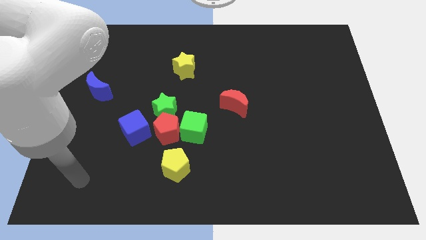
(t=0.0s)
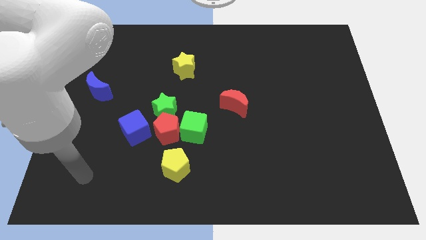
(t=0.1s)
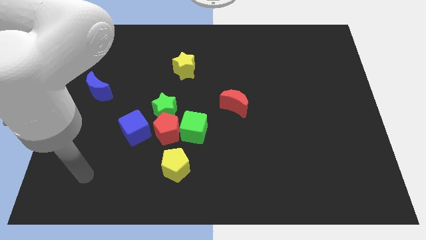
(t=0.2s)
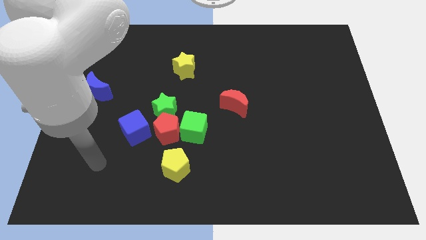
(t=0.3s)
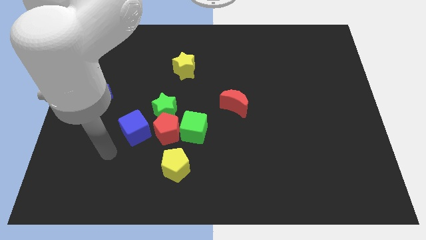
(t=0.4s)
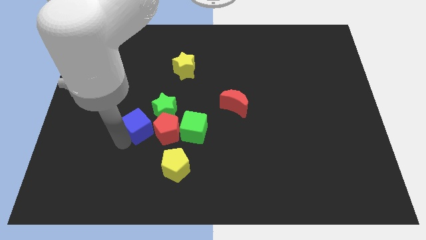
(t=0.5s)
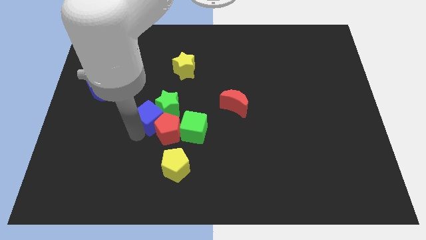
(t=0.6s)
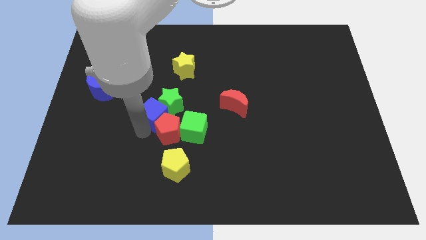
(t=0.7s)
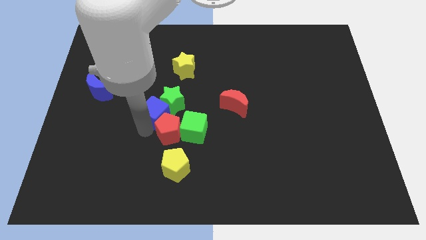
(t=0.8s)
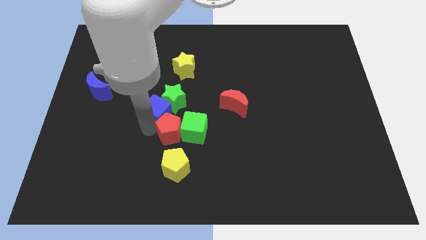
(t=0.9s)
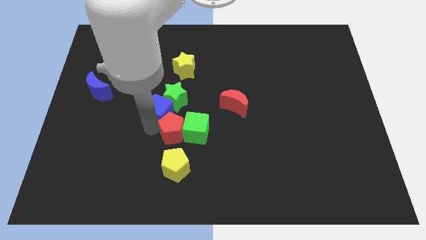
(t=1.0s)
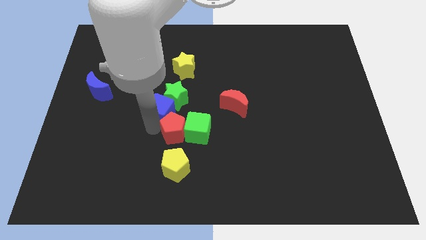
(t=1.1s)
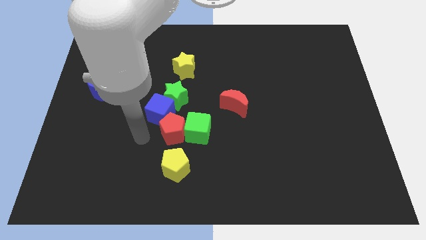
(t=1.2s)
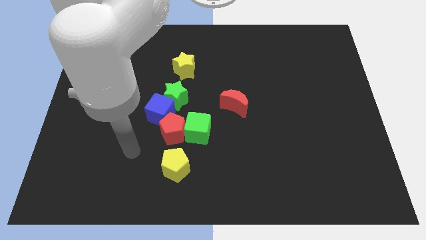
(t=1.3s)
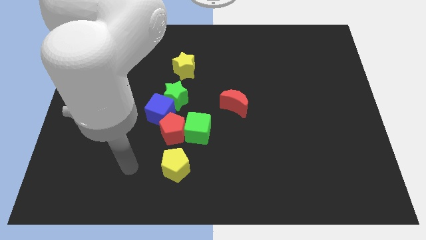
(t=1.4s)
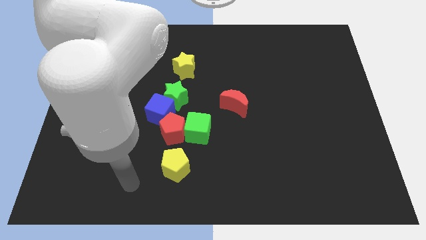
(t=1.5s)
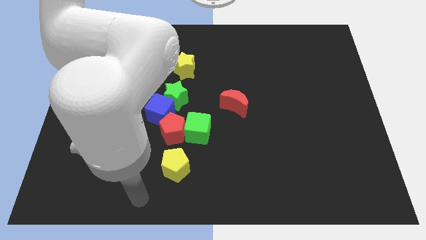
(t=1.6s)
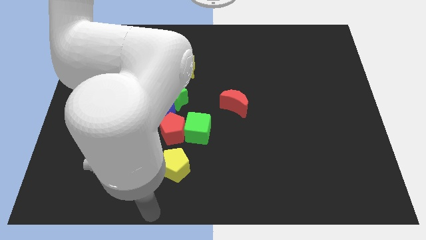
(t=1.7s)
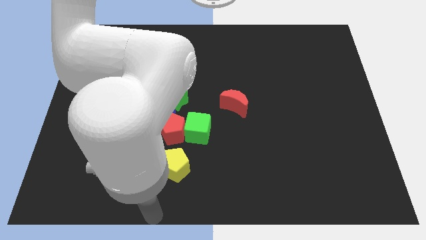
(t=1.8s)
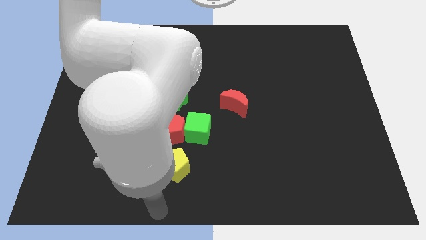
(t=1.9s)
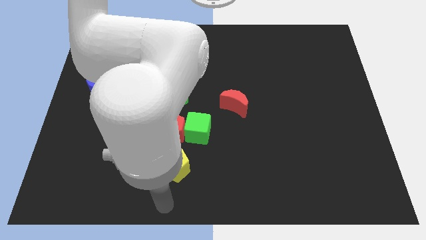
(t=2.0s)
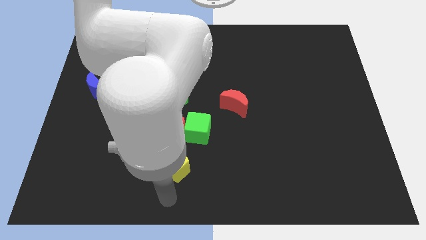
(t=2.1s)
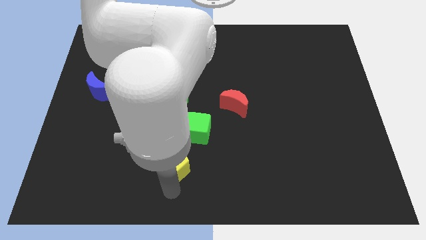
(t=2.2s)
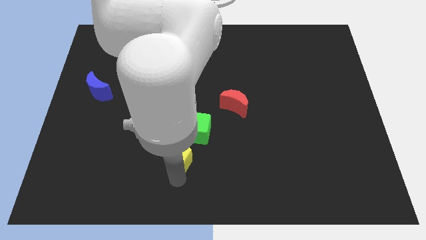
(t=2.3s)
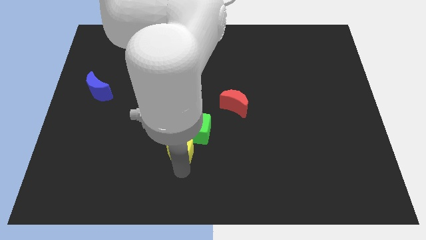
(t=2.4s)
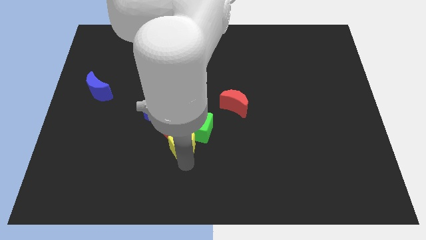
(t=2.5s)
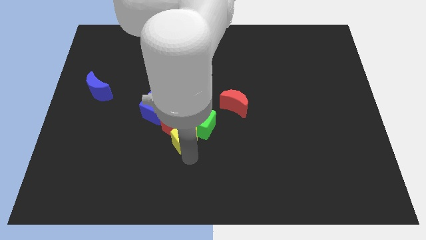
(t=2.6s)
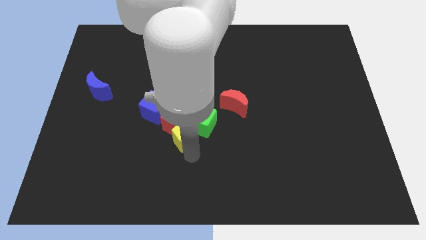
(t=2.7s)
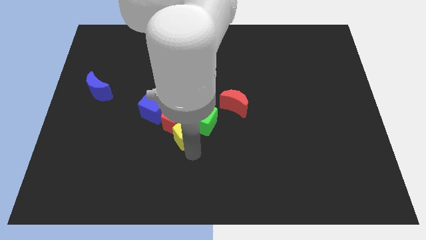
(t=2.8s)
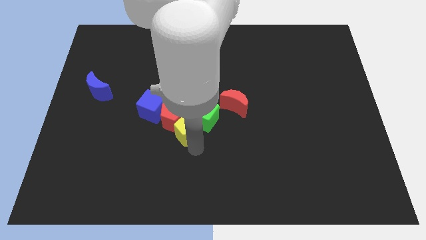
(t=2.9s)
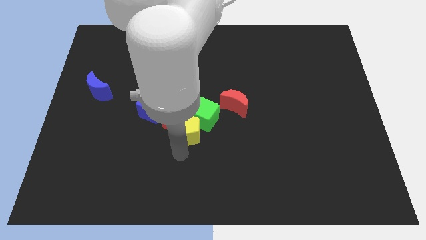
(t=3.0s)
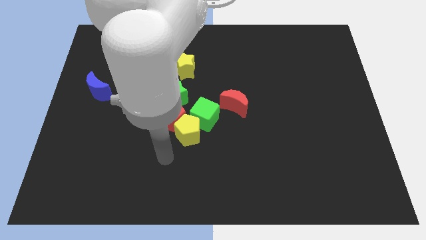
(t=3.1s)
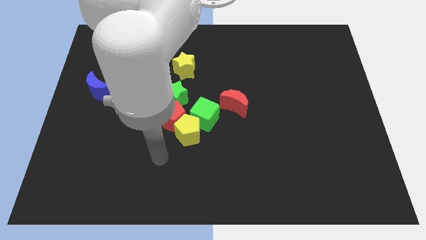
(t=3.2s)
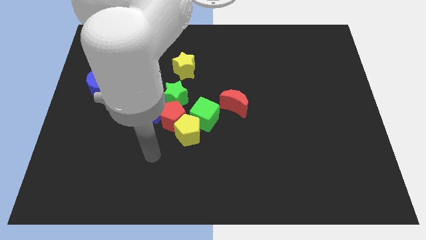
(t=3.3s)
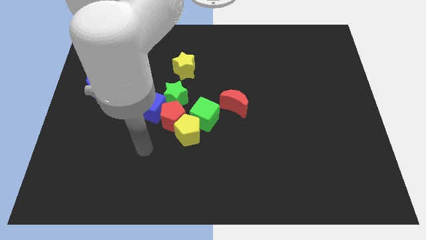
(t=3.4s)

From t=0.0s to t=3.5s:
move the blue cube and the yellow pentagon towards the group of blocks

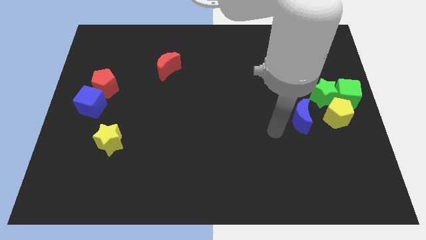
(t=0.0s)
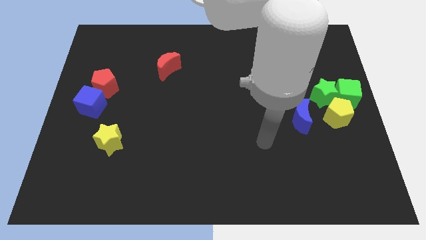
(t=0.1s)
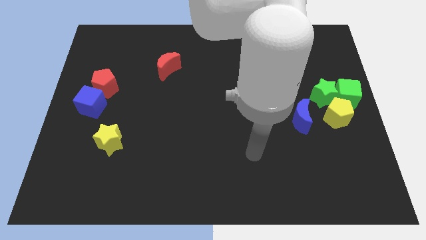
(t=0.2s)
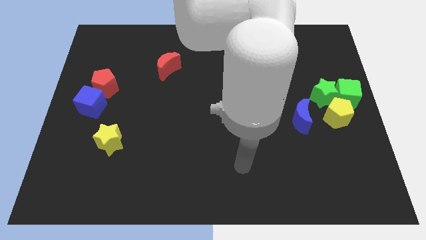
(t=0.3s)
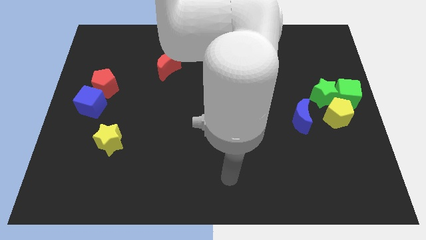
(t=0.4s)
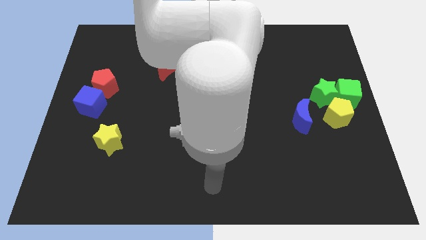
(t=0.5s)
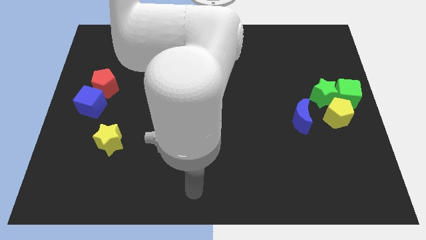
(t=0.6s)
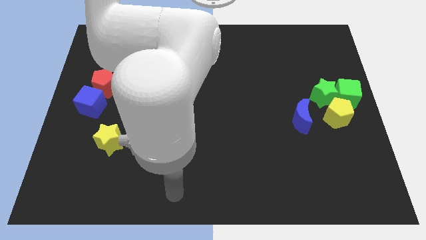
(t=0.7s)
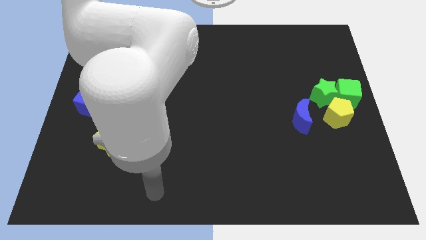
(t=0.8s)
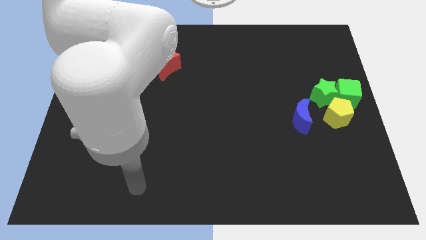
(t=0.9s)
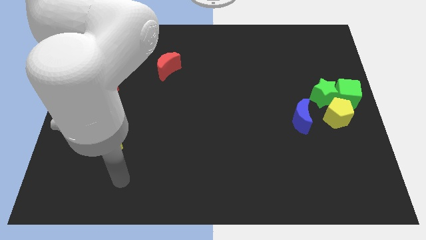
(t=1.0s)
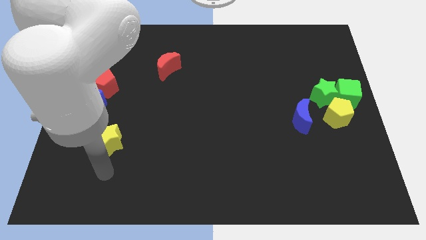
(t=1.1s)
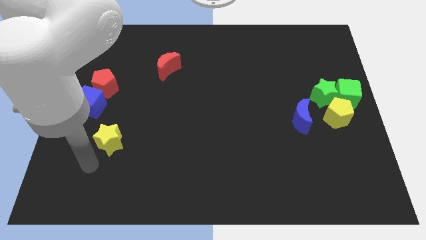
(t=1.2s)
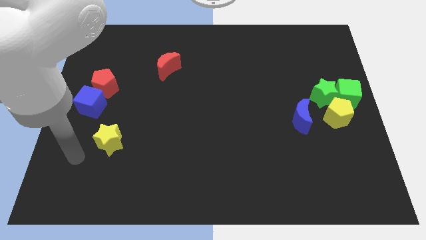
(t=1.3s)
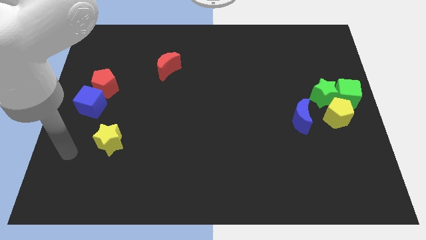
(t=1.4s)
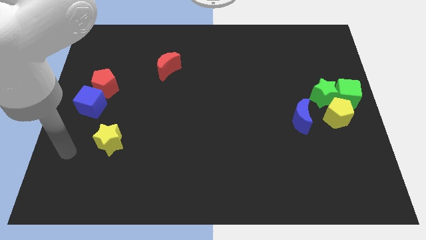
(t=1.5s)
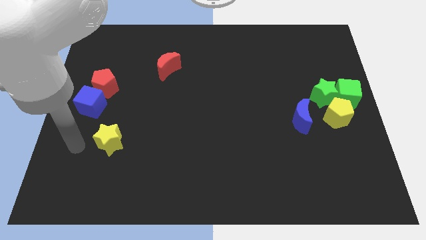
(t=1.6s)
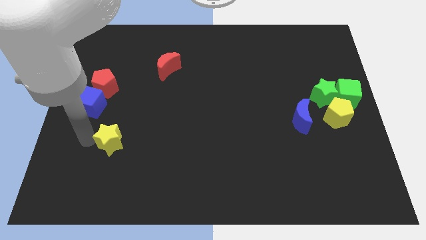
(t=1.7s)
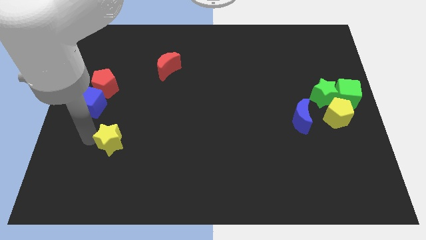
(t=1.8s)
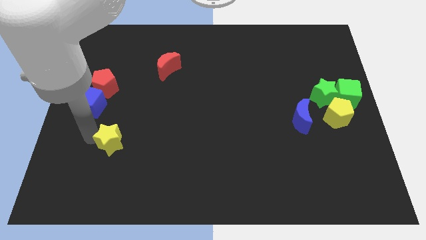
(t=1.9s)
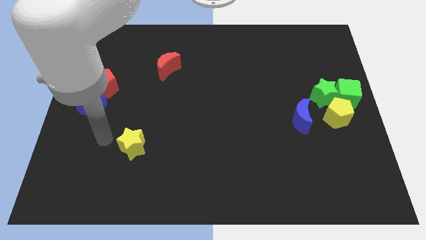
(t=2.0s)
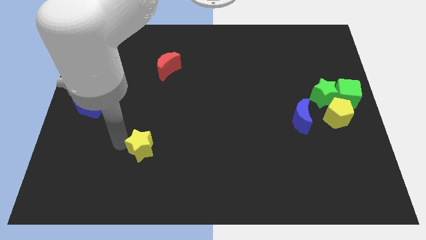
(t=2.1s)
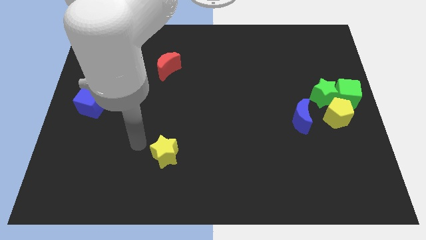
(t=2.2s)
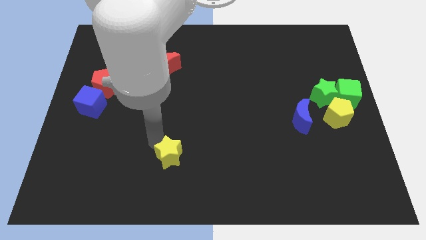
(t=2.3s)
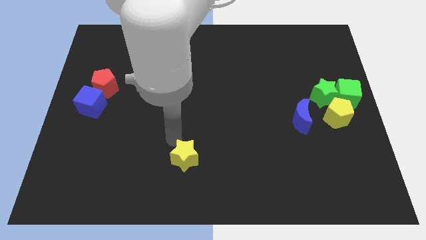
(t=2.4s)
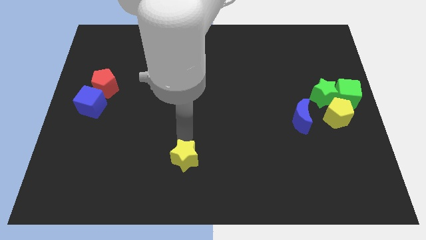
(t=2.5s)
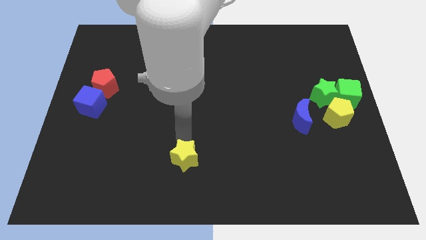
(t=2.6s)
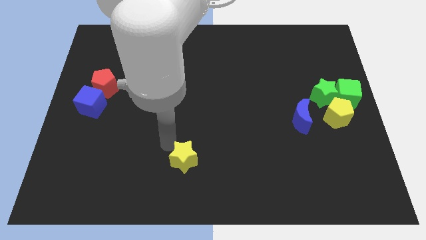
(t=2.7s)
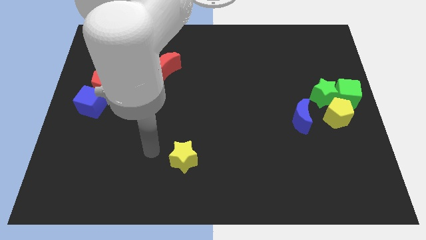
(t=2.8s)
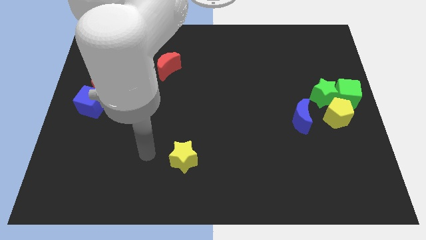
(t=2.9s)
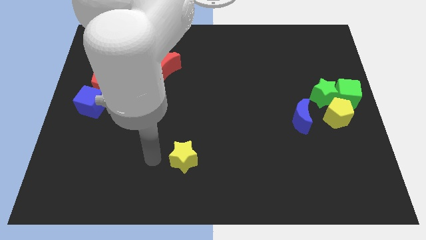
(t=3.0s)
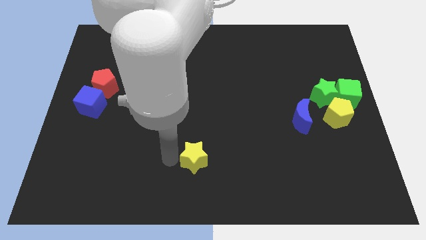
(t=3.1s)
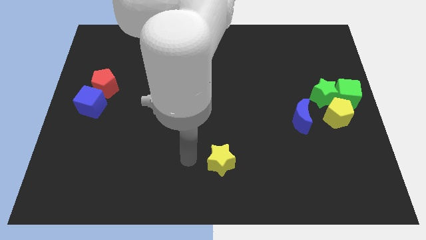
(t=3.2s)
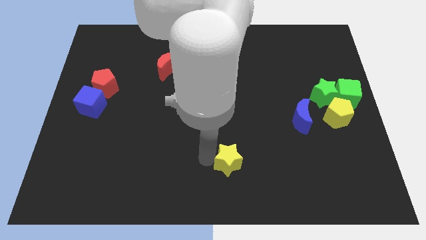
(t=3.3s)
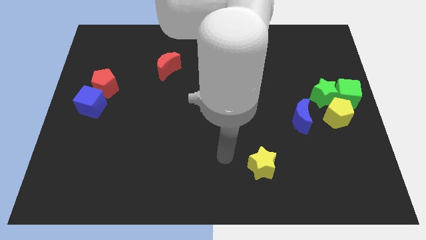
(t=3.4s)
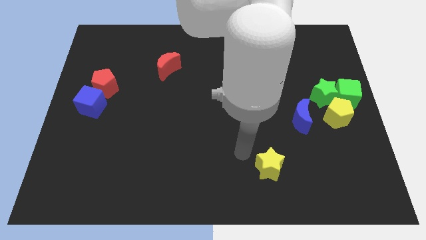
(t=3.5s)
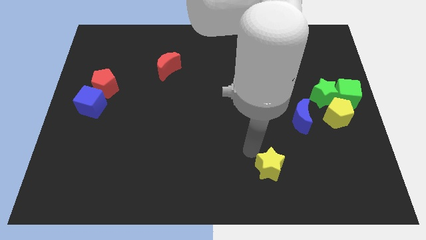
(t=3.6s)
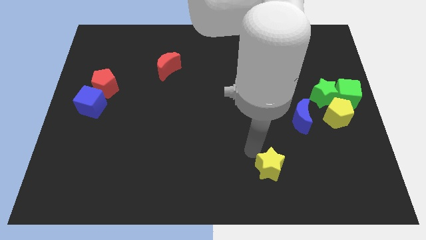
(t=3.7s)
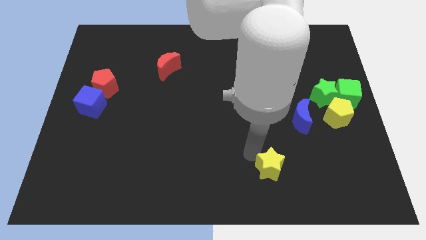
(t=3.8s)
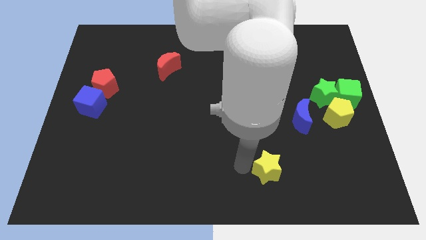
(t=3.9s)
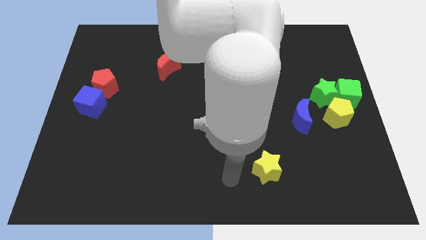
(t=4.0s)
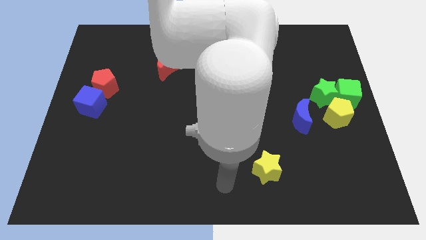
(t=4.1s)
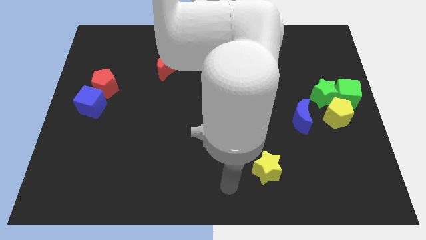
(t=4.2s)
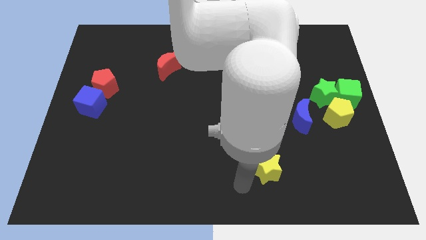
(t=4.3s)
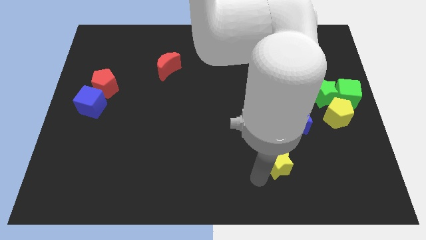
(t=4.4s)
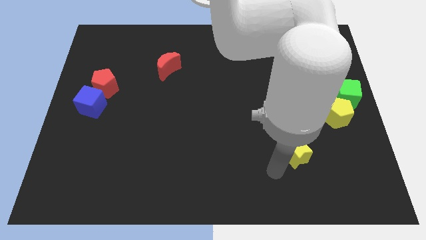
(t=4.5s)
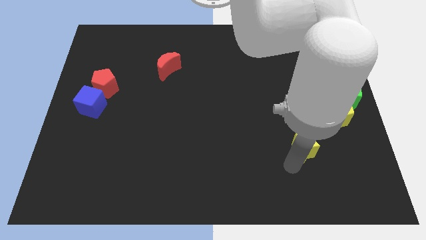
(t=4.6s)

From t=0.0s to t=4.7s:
push the yellow star to the bottom of the blue crescent

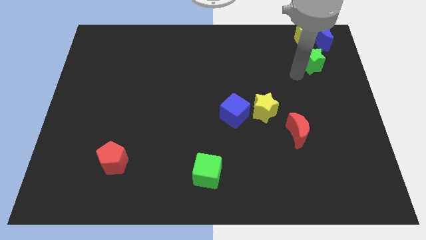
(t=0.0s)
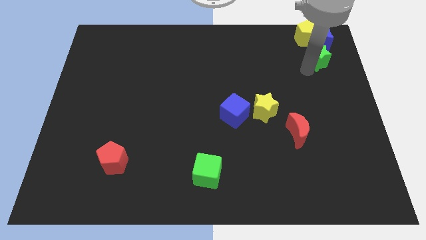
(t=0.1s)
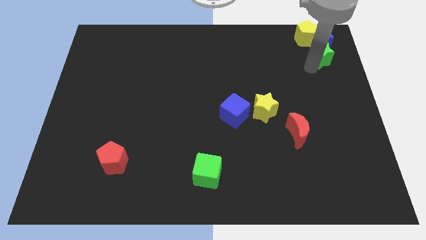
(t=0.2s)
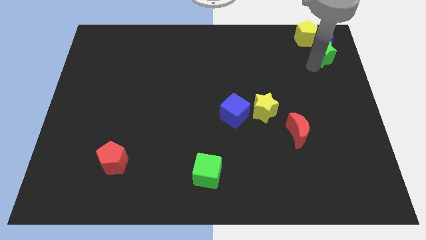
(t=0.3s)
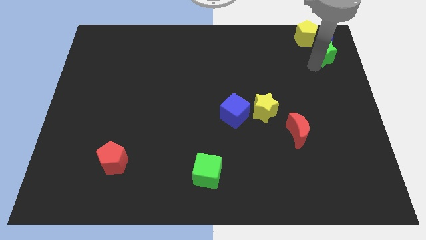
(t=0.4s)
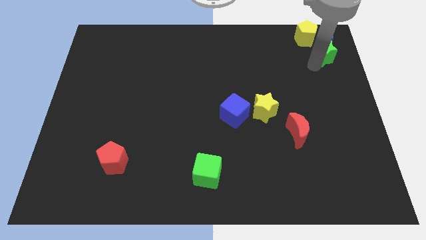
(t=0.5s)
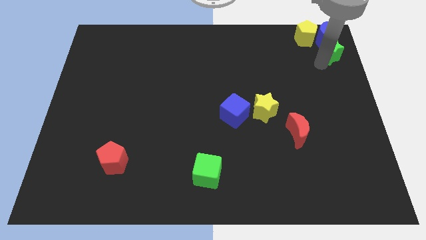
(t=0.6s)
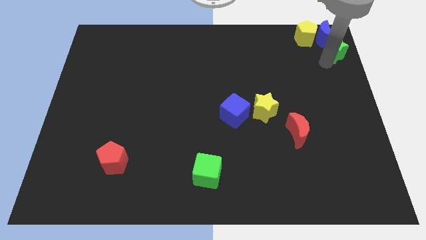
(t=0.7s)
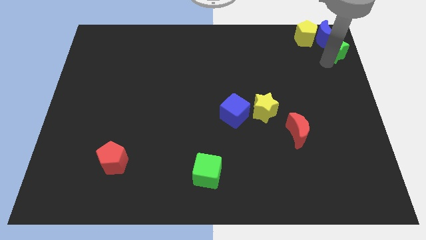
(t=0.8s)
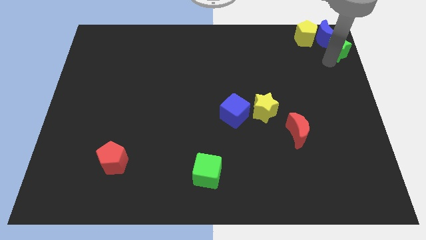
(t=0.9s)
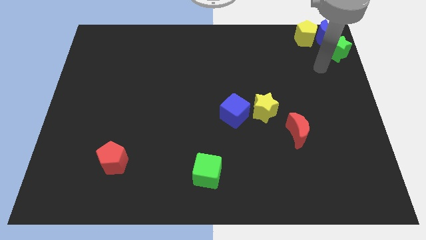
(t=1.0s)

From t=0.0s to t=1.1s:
push the green star into the blue moon
